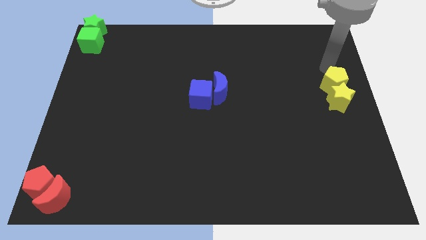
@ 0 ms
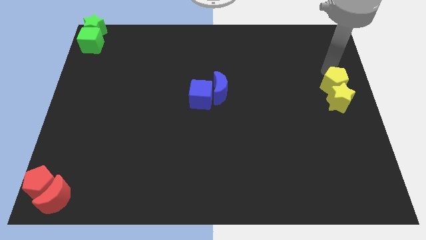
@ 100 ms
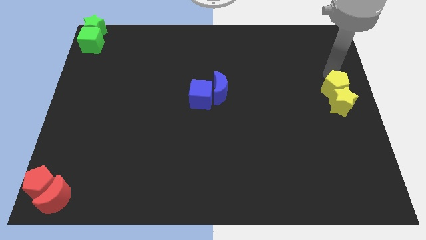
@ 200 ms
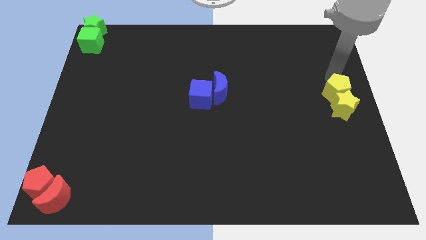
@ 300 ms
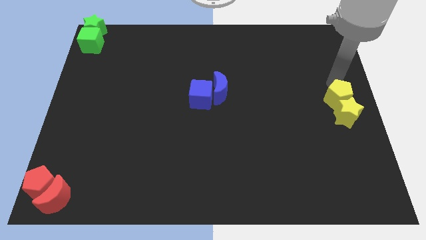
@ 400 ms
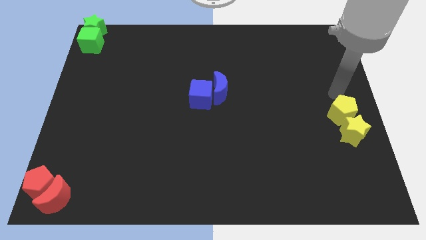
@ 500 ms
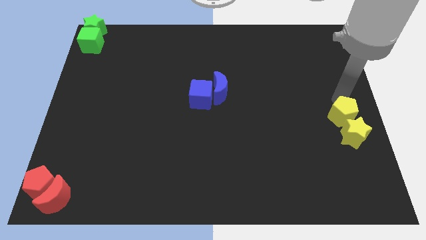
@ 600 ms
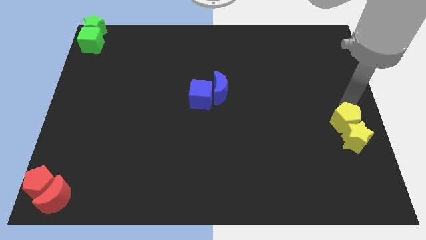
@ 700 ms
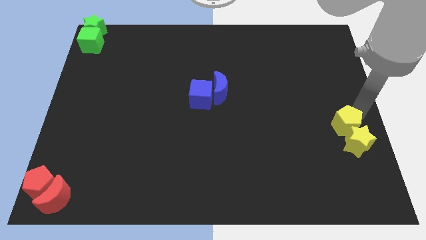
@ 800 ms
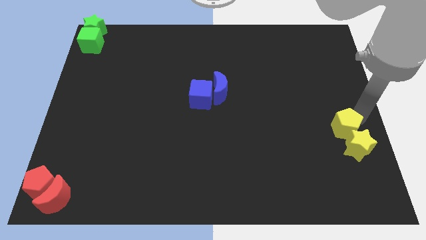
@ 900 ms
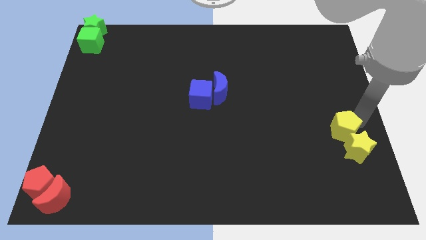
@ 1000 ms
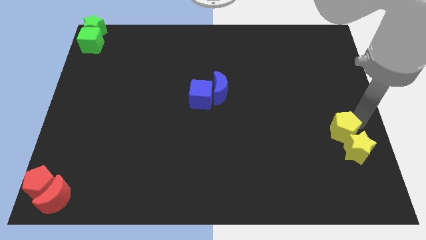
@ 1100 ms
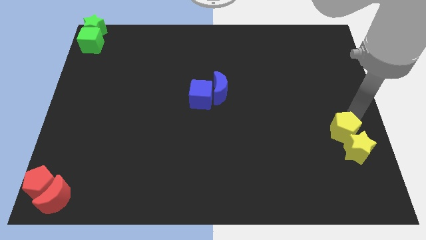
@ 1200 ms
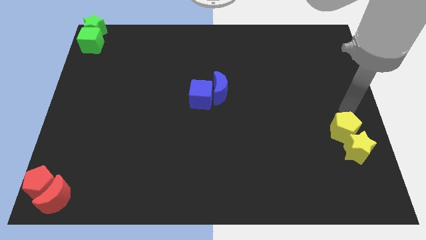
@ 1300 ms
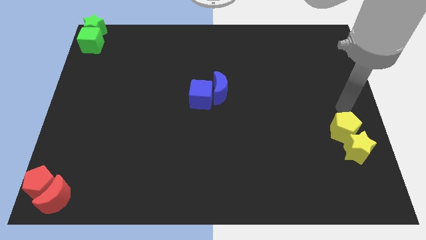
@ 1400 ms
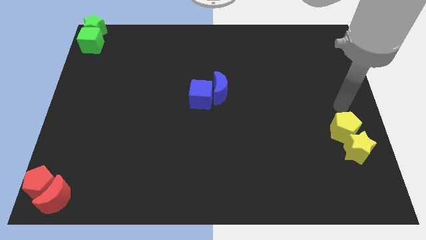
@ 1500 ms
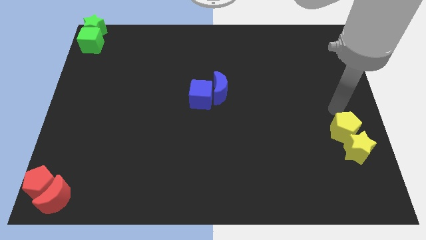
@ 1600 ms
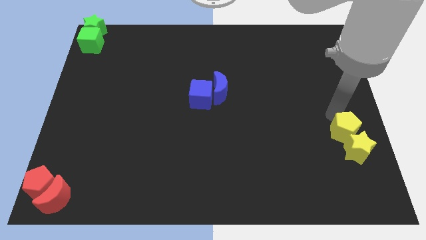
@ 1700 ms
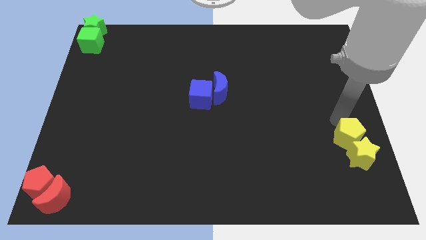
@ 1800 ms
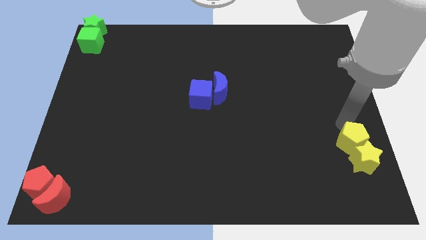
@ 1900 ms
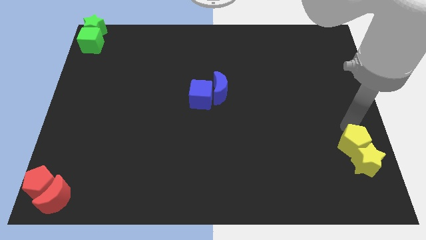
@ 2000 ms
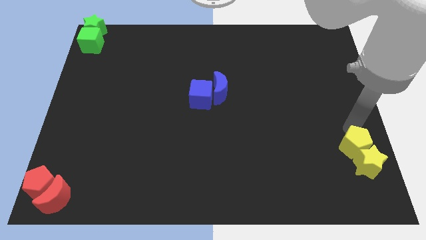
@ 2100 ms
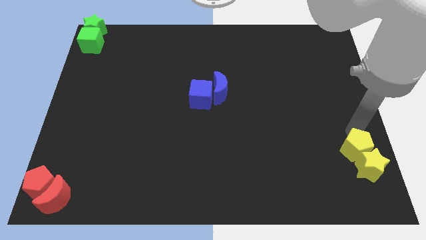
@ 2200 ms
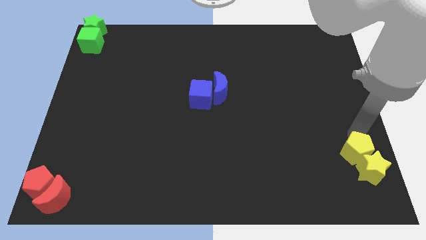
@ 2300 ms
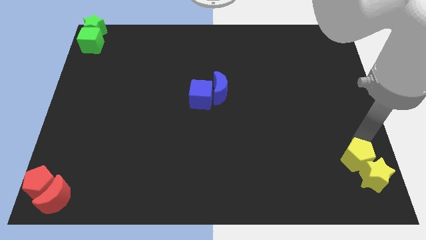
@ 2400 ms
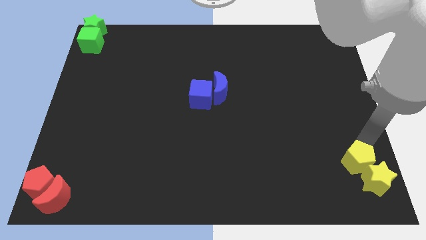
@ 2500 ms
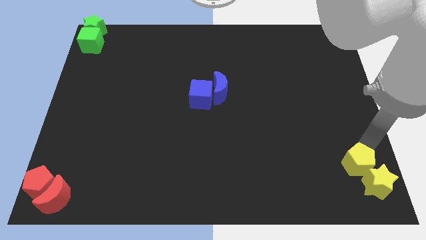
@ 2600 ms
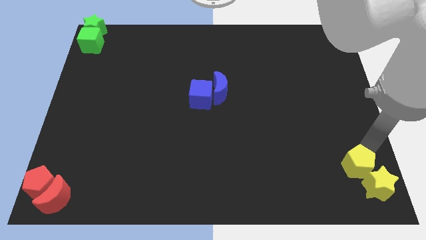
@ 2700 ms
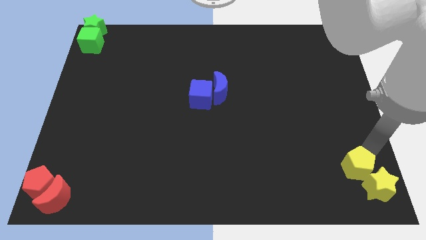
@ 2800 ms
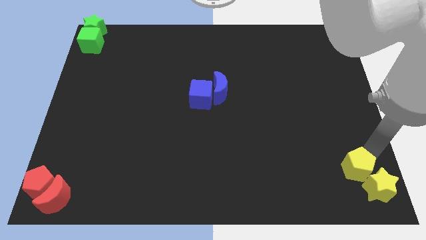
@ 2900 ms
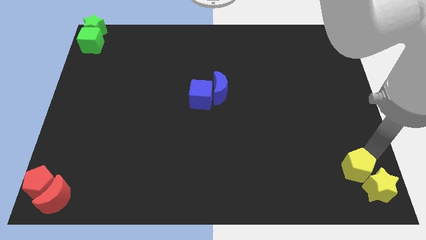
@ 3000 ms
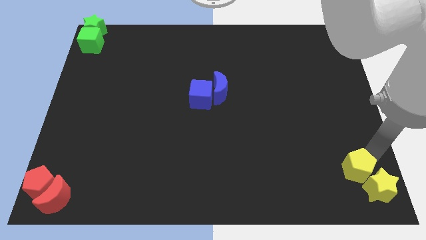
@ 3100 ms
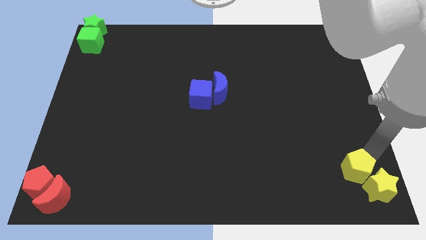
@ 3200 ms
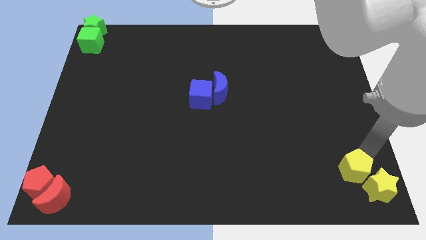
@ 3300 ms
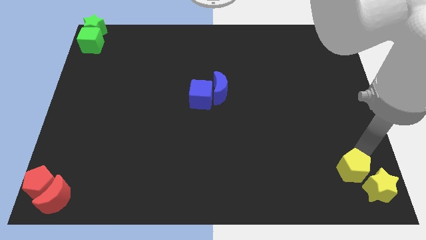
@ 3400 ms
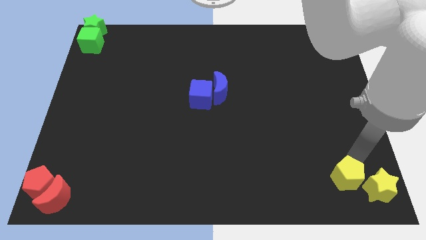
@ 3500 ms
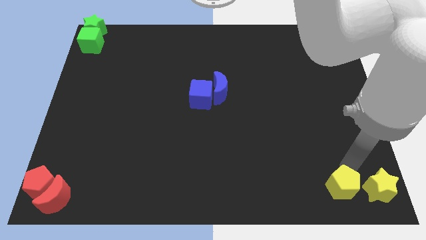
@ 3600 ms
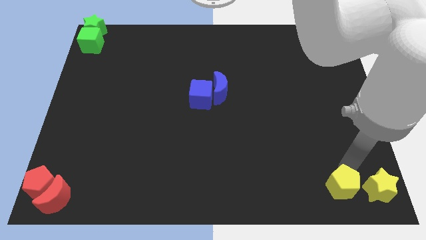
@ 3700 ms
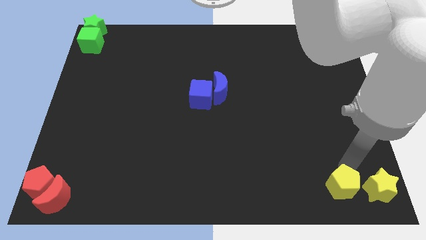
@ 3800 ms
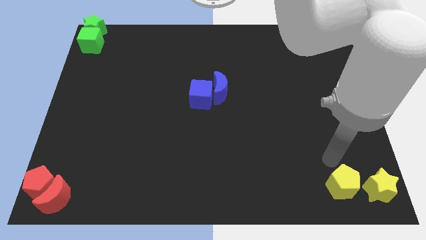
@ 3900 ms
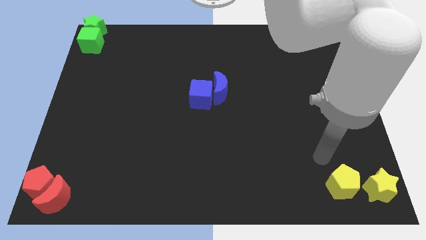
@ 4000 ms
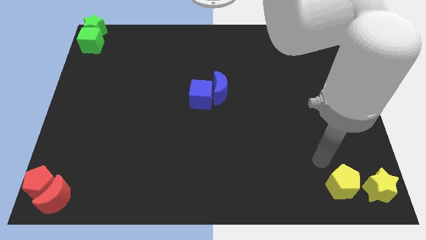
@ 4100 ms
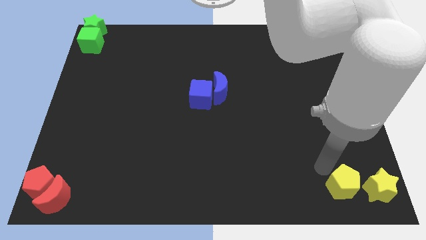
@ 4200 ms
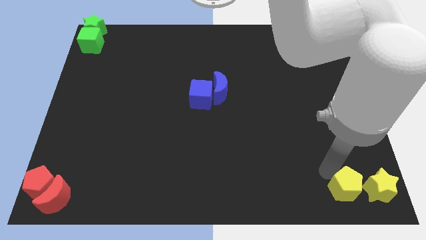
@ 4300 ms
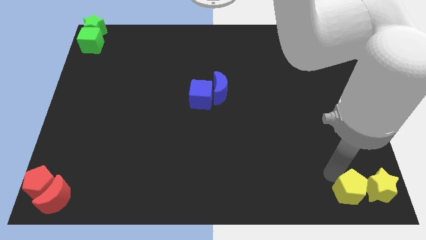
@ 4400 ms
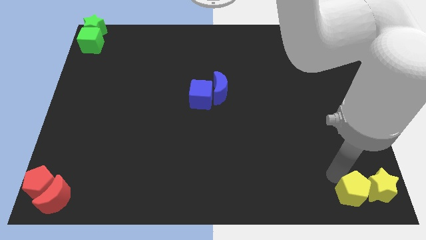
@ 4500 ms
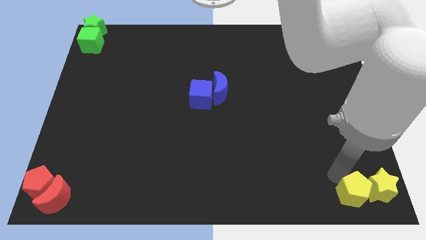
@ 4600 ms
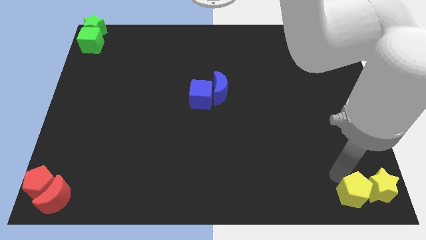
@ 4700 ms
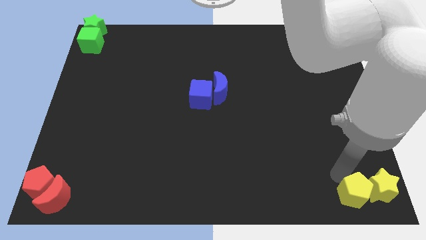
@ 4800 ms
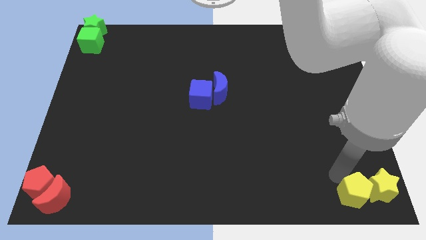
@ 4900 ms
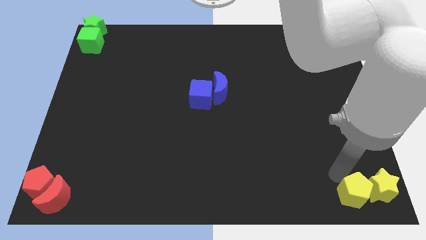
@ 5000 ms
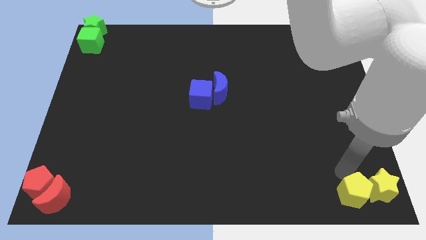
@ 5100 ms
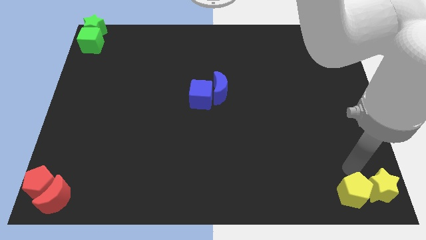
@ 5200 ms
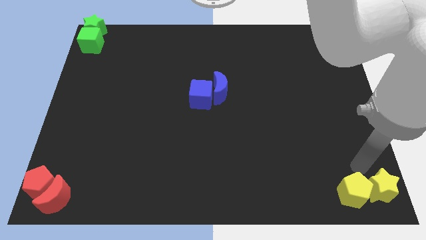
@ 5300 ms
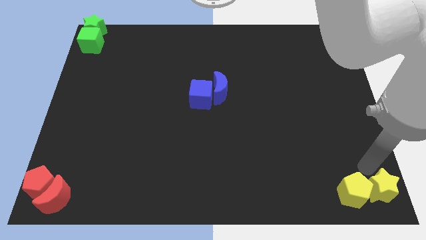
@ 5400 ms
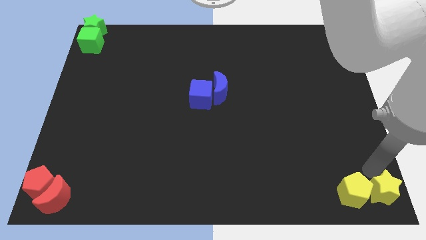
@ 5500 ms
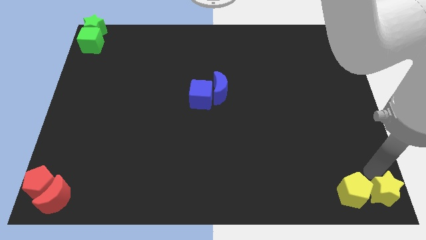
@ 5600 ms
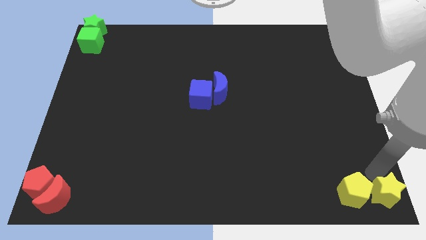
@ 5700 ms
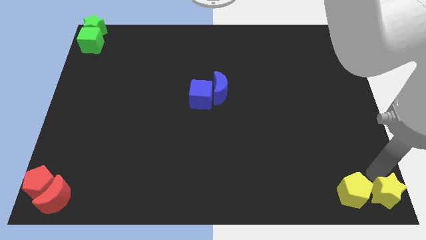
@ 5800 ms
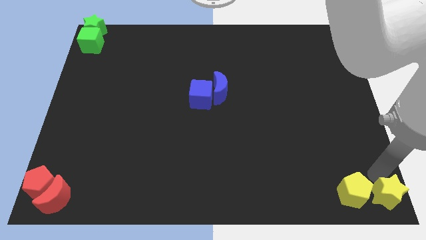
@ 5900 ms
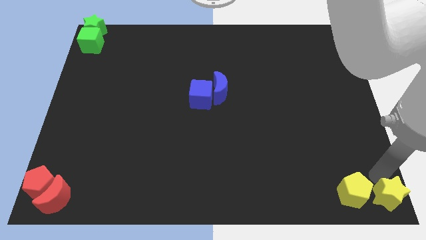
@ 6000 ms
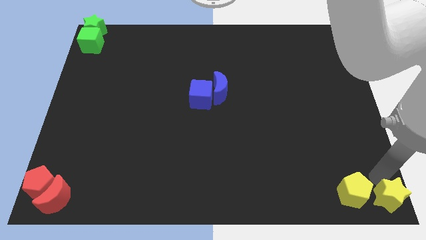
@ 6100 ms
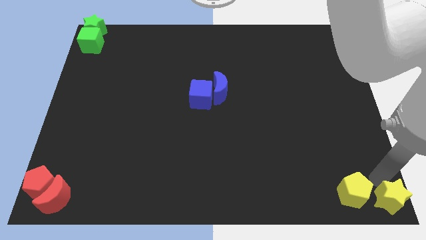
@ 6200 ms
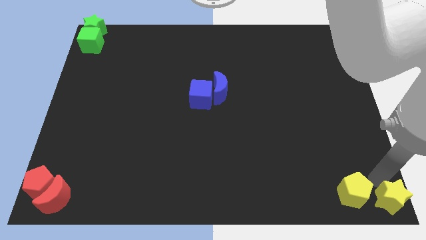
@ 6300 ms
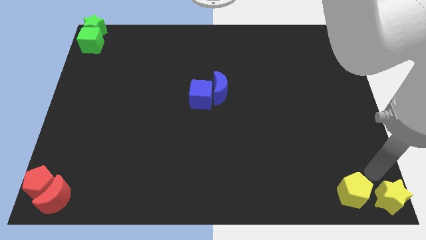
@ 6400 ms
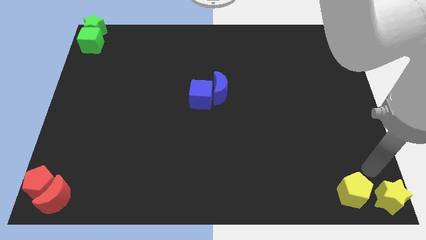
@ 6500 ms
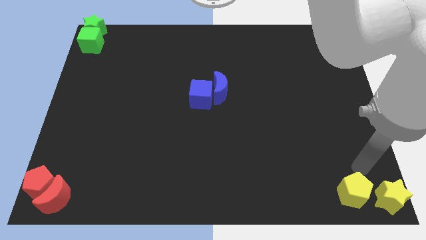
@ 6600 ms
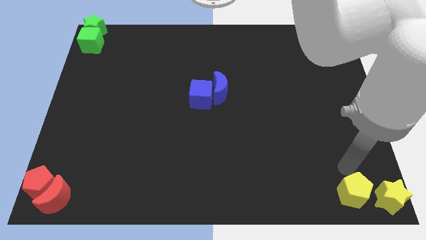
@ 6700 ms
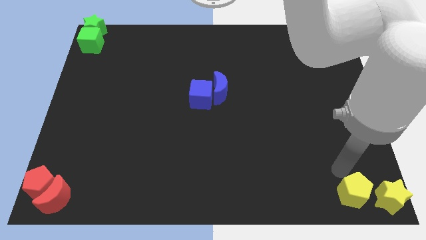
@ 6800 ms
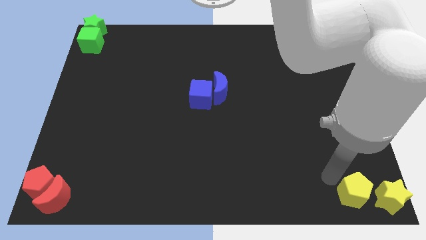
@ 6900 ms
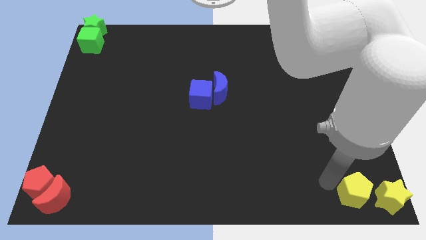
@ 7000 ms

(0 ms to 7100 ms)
put the yellow blocks at the bottom right corner

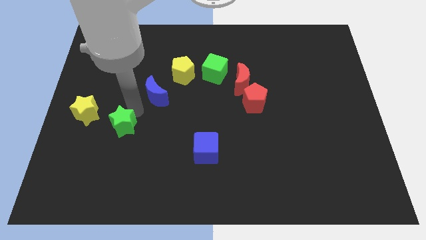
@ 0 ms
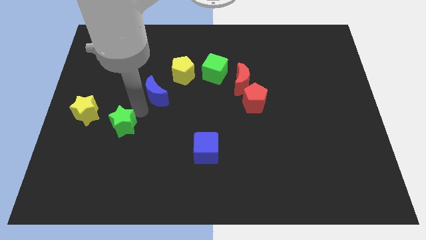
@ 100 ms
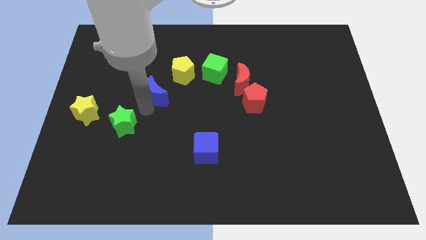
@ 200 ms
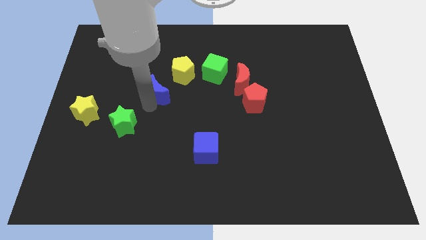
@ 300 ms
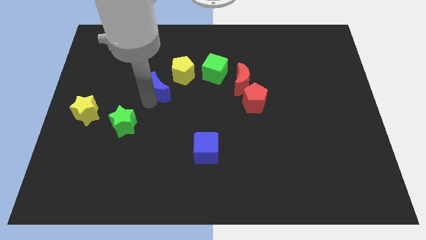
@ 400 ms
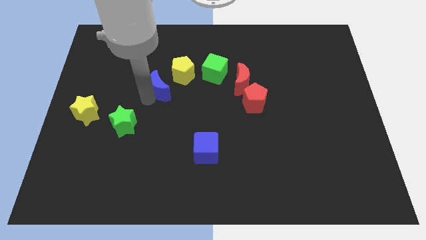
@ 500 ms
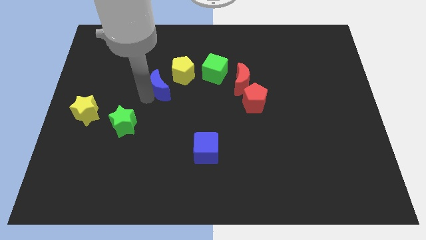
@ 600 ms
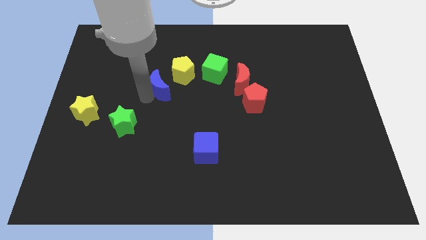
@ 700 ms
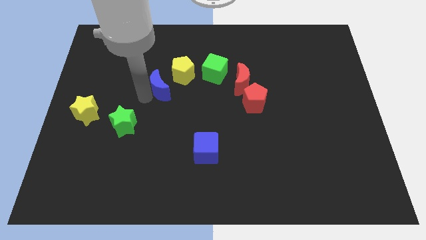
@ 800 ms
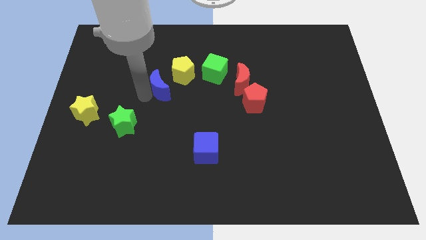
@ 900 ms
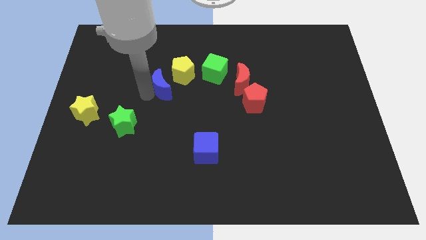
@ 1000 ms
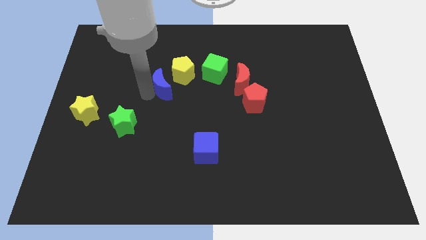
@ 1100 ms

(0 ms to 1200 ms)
move the blue crescent near the yellow yellow pentagon

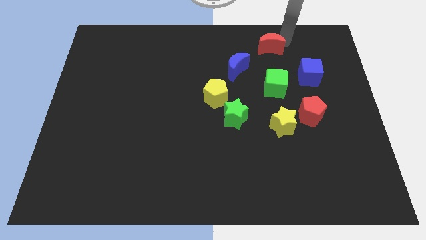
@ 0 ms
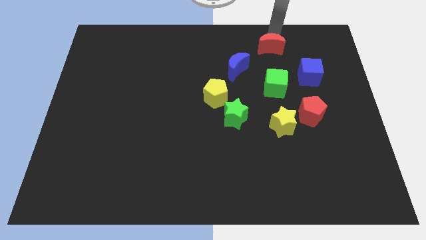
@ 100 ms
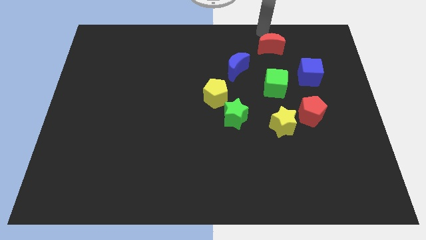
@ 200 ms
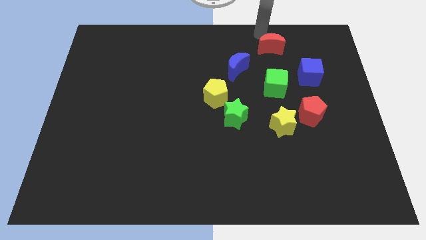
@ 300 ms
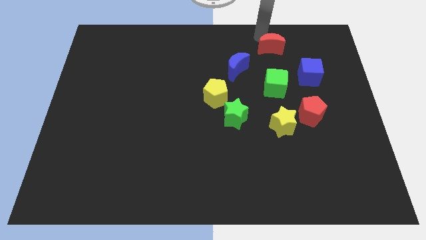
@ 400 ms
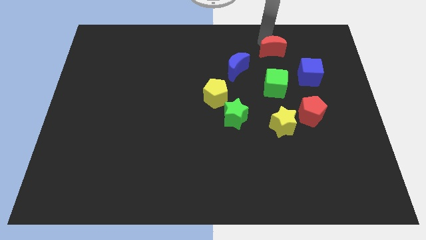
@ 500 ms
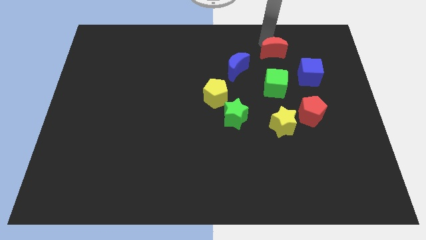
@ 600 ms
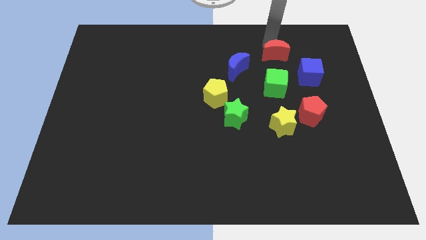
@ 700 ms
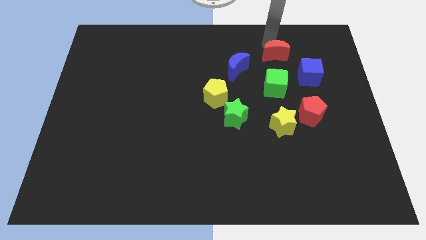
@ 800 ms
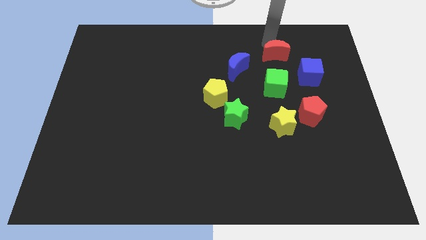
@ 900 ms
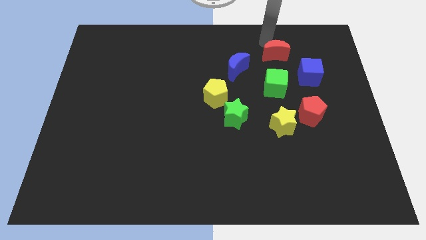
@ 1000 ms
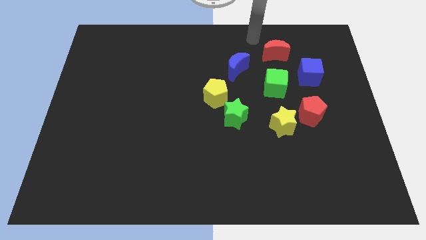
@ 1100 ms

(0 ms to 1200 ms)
place red moon close to the green cube
